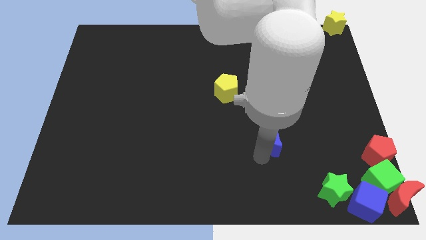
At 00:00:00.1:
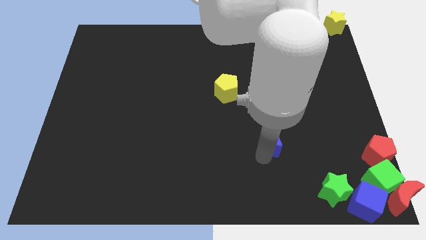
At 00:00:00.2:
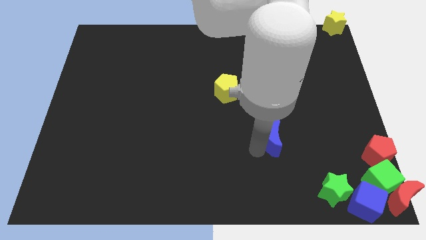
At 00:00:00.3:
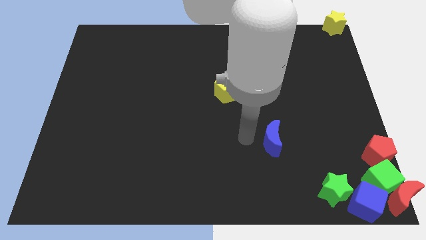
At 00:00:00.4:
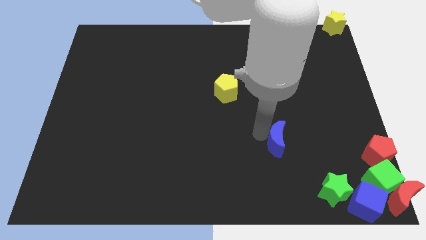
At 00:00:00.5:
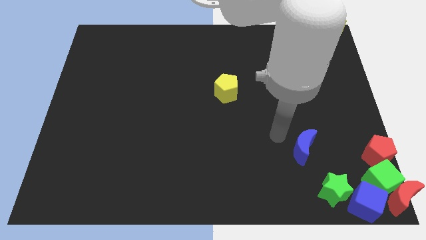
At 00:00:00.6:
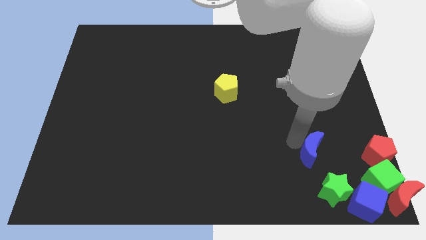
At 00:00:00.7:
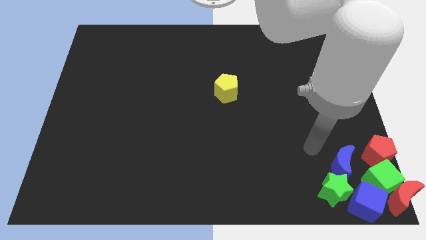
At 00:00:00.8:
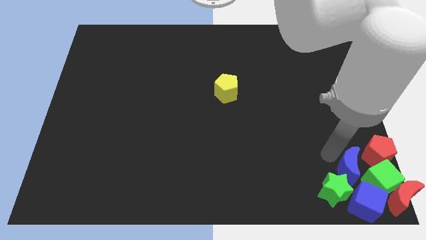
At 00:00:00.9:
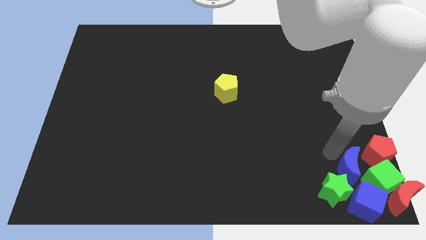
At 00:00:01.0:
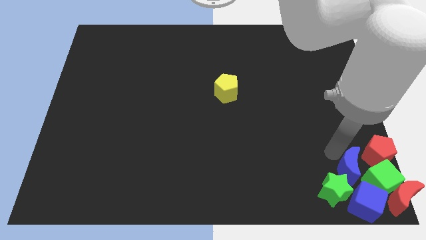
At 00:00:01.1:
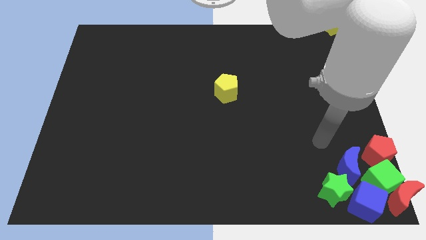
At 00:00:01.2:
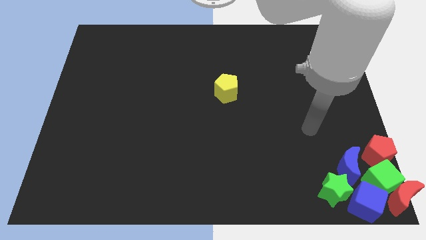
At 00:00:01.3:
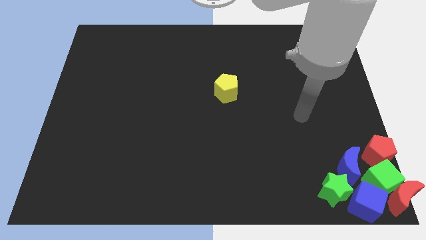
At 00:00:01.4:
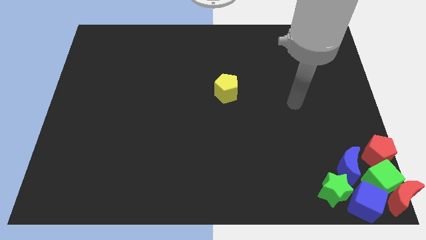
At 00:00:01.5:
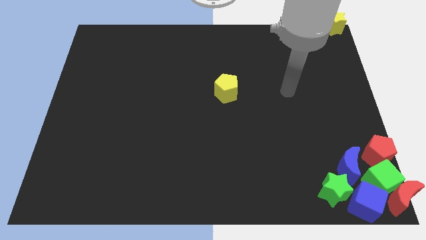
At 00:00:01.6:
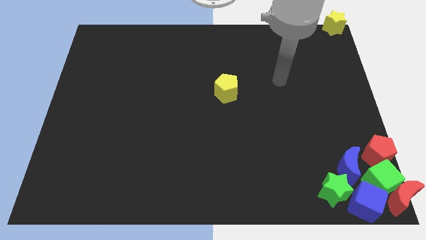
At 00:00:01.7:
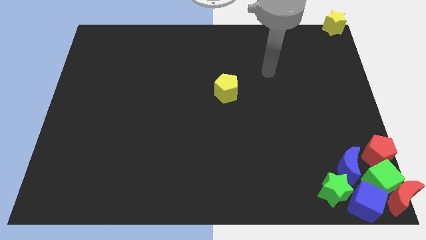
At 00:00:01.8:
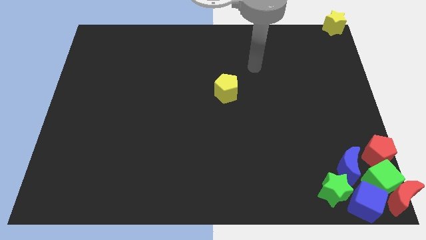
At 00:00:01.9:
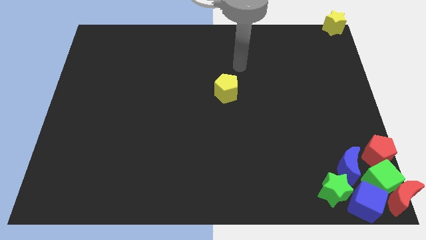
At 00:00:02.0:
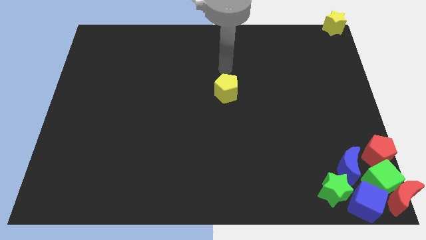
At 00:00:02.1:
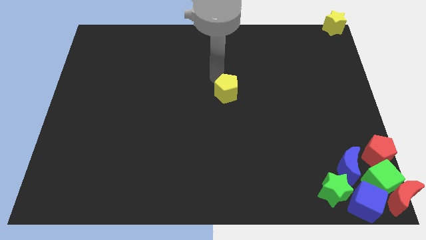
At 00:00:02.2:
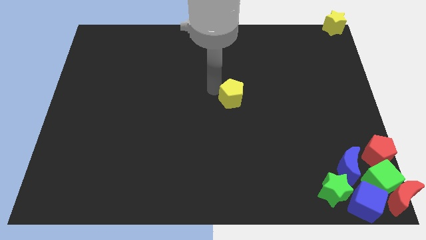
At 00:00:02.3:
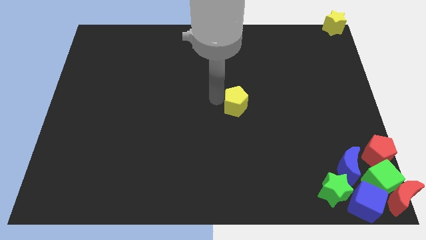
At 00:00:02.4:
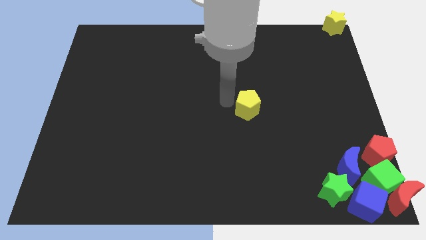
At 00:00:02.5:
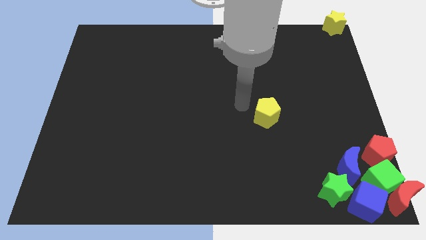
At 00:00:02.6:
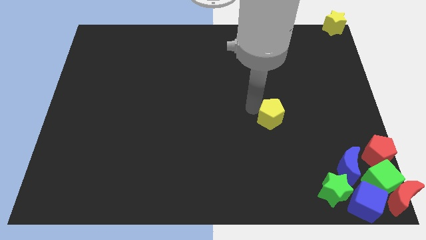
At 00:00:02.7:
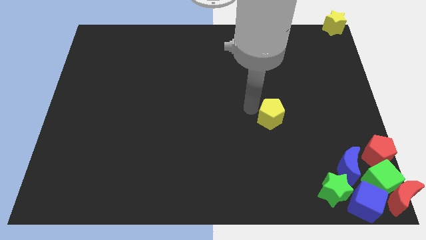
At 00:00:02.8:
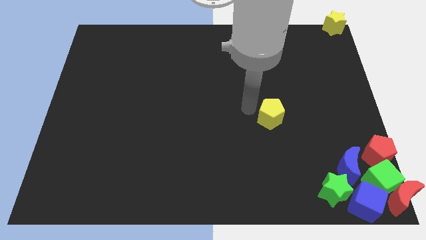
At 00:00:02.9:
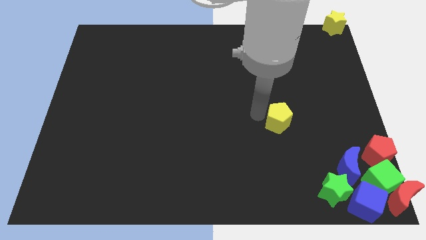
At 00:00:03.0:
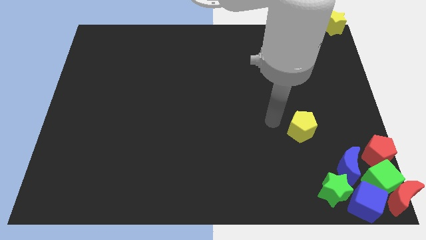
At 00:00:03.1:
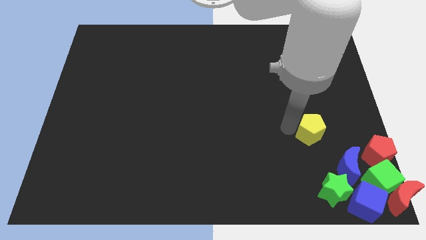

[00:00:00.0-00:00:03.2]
push yellow pentagon diagonally to green star

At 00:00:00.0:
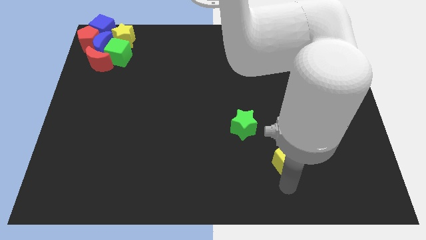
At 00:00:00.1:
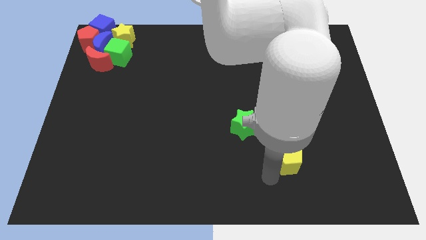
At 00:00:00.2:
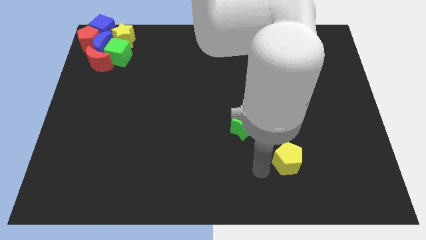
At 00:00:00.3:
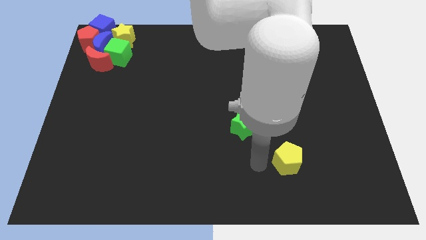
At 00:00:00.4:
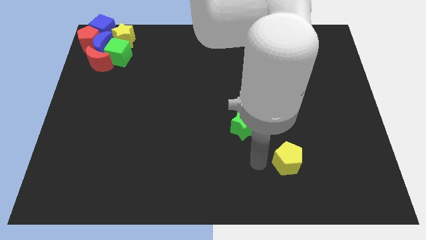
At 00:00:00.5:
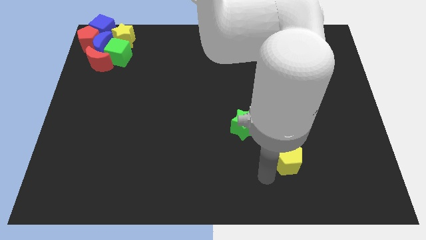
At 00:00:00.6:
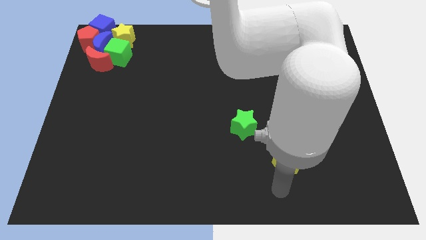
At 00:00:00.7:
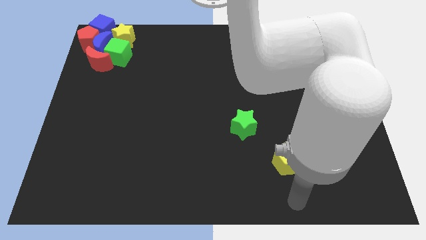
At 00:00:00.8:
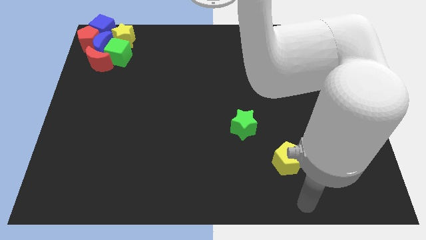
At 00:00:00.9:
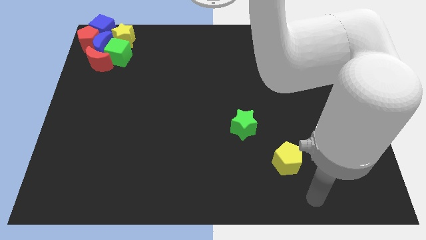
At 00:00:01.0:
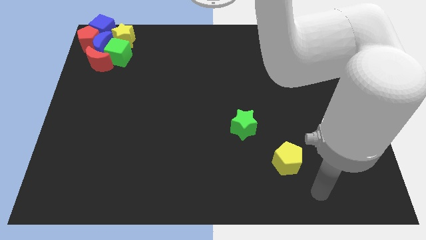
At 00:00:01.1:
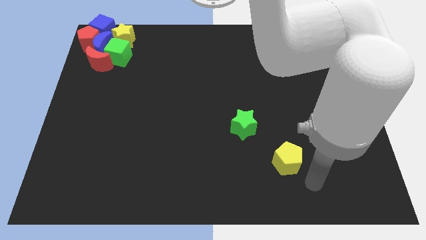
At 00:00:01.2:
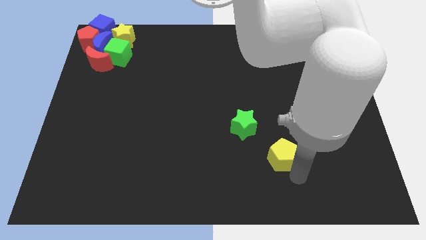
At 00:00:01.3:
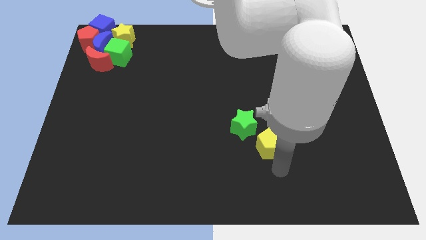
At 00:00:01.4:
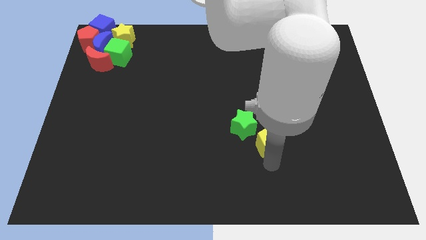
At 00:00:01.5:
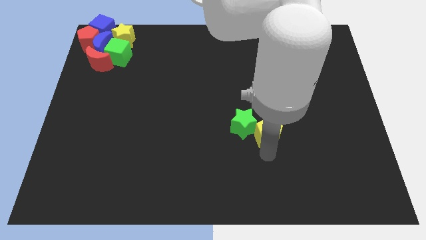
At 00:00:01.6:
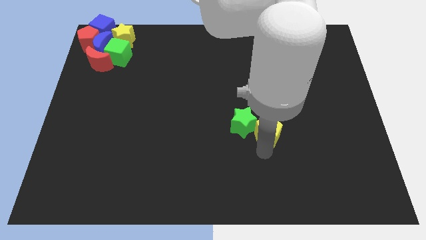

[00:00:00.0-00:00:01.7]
push the yellow pentagon into the green star

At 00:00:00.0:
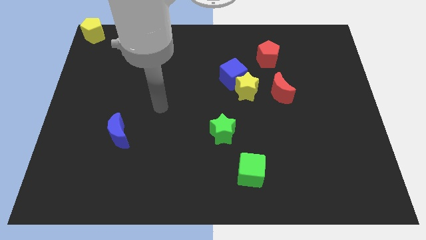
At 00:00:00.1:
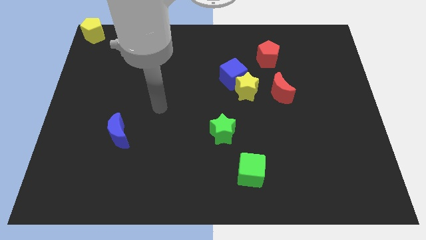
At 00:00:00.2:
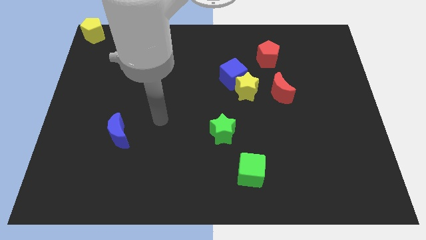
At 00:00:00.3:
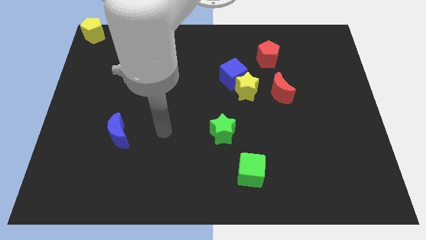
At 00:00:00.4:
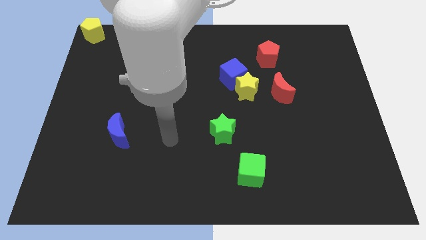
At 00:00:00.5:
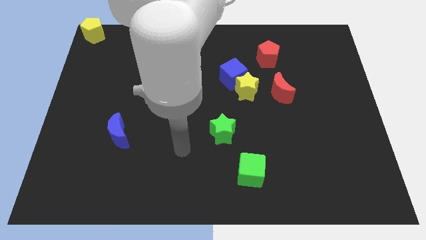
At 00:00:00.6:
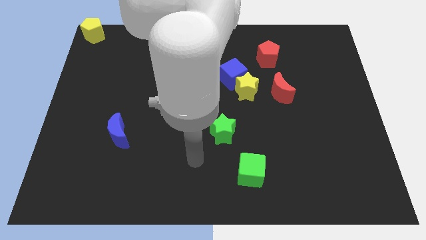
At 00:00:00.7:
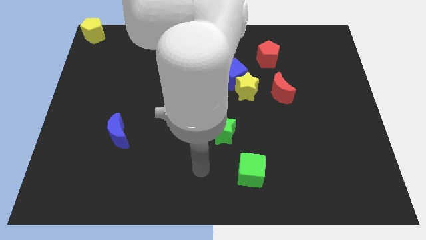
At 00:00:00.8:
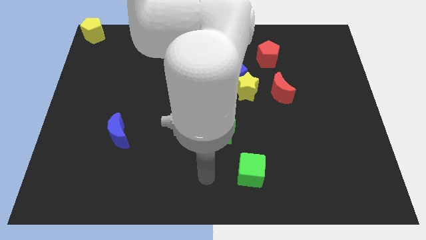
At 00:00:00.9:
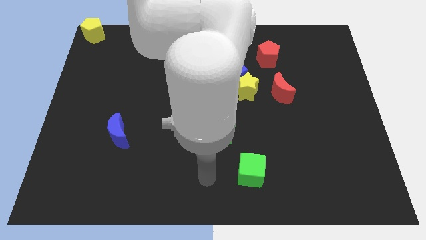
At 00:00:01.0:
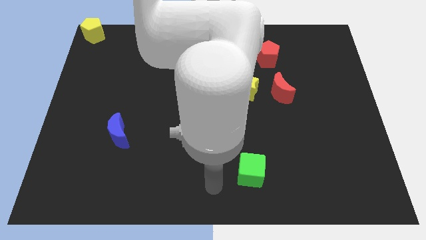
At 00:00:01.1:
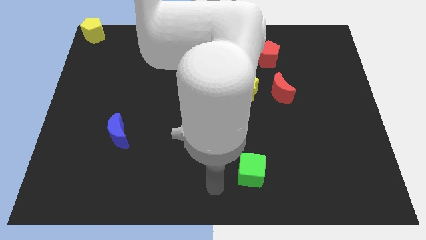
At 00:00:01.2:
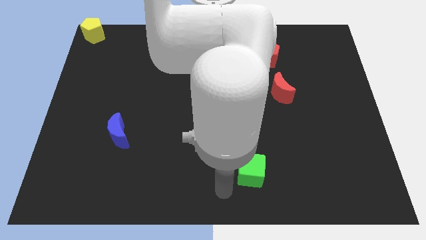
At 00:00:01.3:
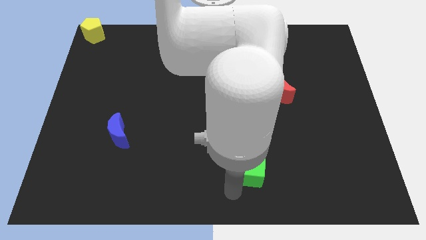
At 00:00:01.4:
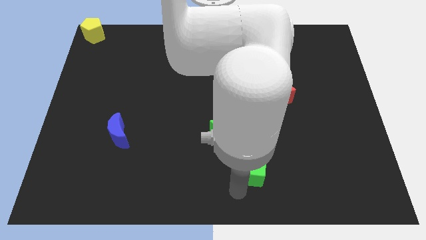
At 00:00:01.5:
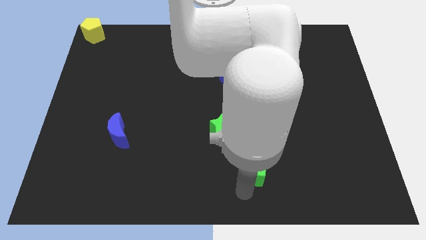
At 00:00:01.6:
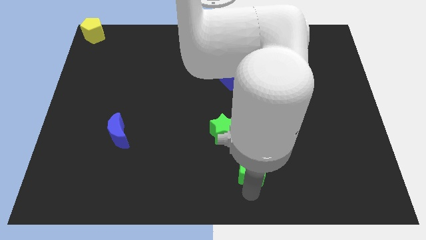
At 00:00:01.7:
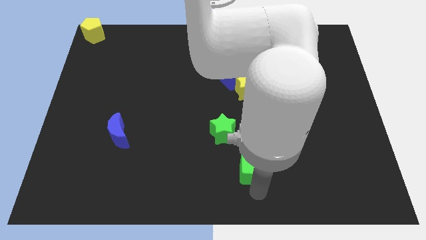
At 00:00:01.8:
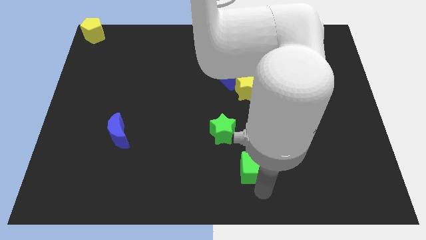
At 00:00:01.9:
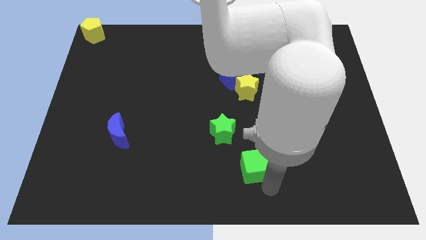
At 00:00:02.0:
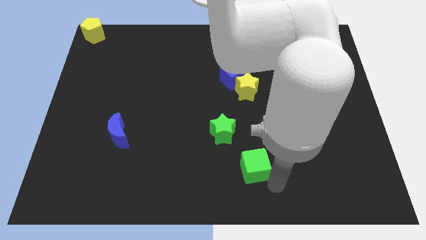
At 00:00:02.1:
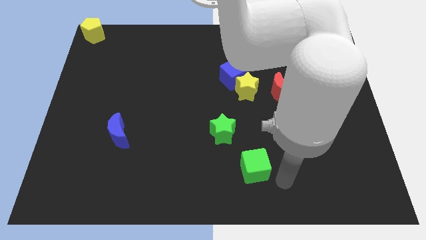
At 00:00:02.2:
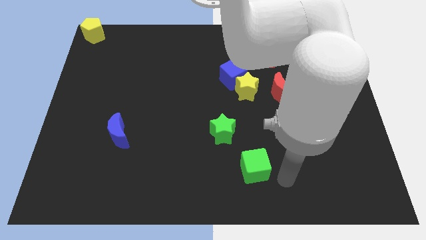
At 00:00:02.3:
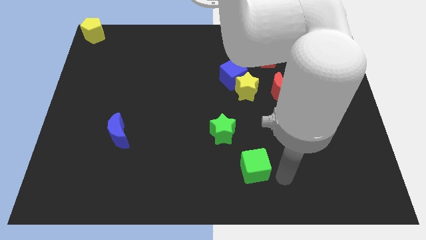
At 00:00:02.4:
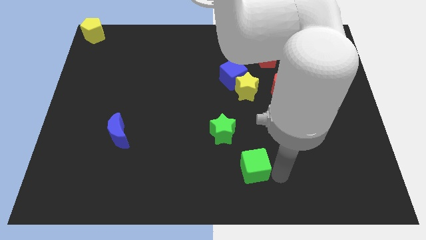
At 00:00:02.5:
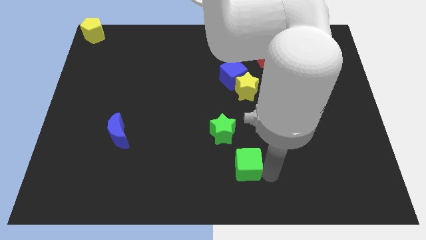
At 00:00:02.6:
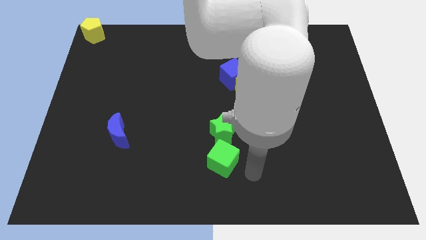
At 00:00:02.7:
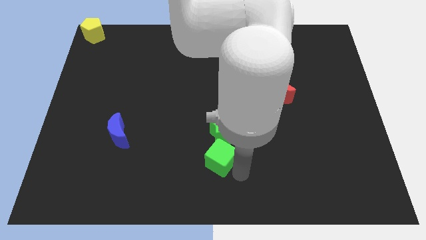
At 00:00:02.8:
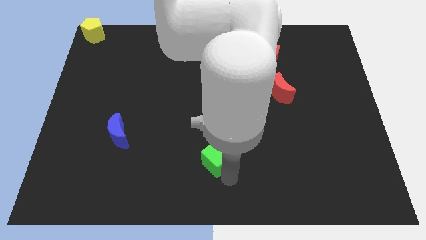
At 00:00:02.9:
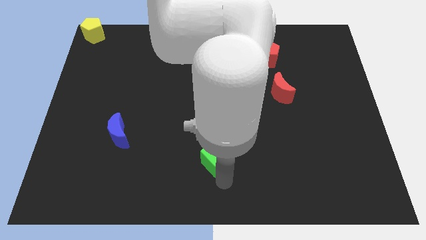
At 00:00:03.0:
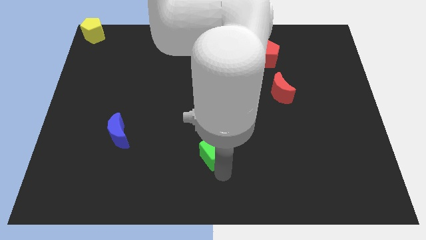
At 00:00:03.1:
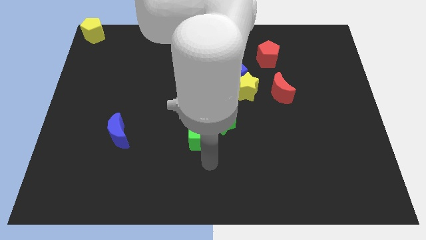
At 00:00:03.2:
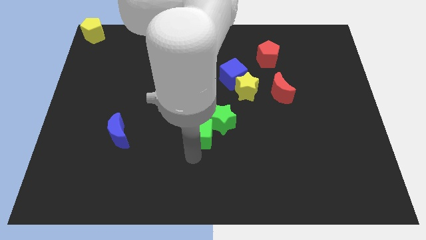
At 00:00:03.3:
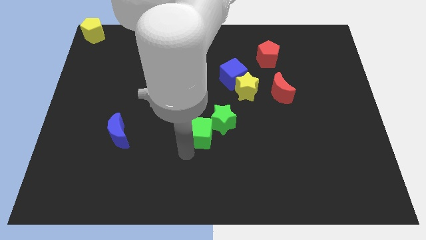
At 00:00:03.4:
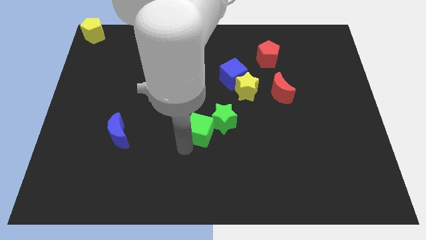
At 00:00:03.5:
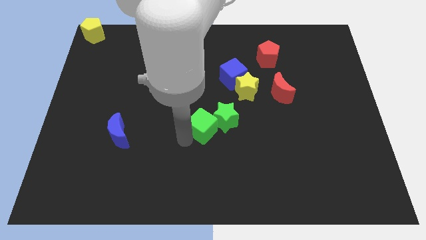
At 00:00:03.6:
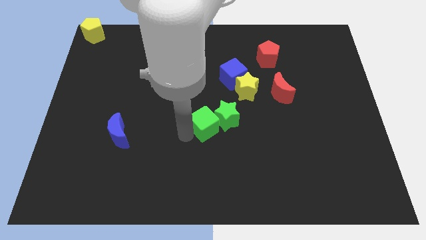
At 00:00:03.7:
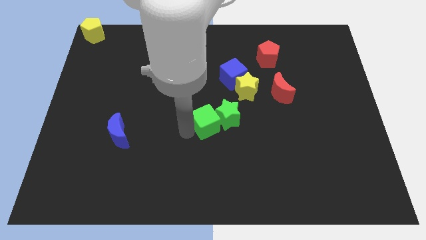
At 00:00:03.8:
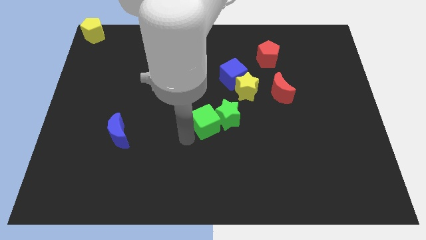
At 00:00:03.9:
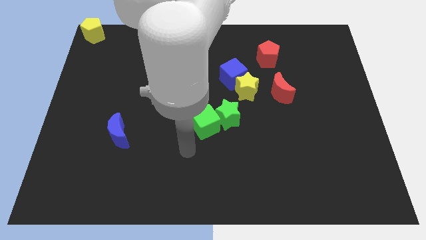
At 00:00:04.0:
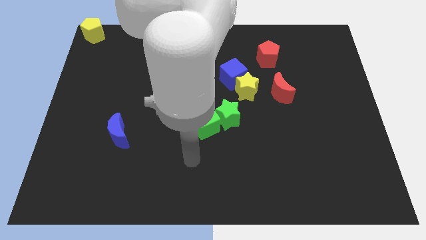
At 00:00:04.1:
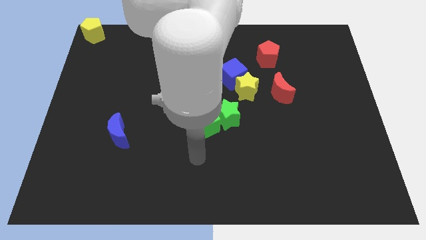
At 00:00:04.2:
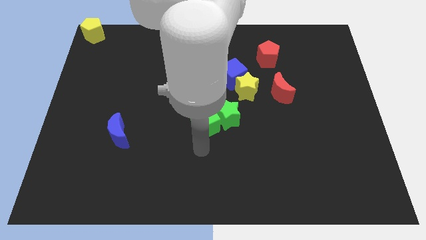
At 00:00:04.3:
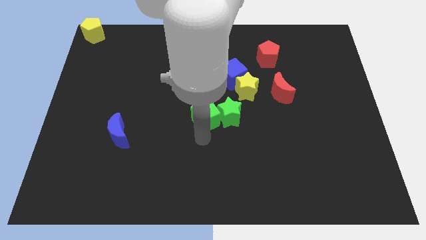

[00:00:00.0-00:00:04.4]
push the green cube into the green star
